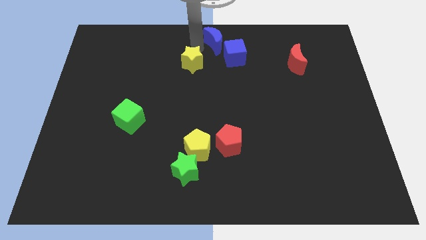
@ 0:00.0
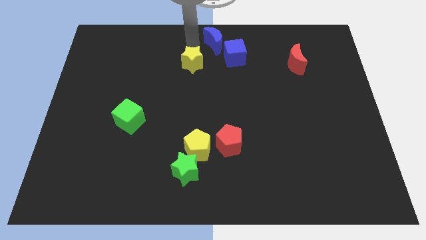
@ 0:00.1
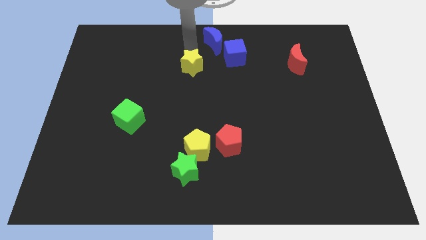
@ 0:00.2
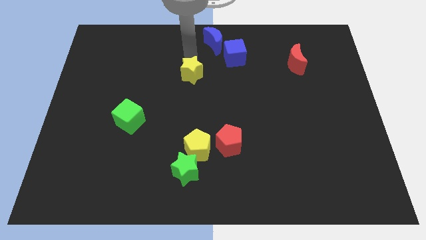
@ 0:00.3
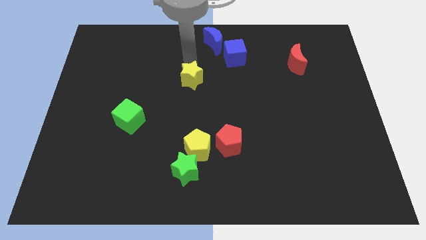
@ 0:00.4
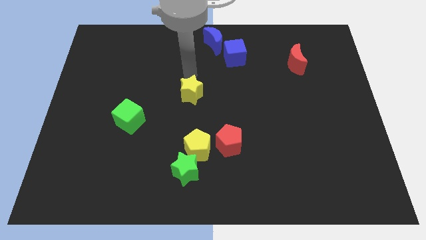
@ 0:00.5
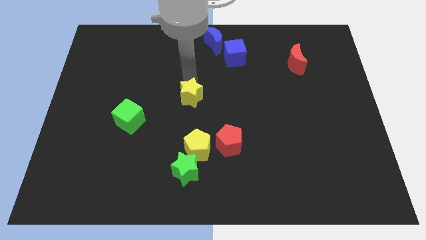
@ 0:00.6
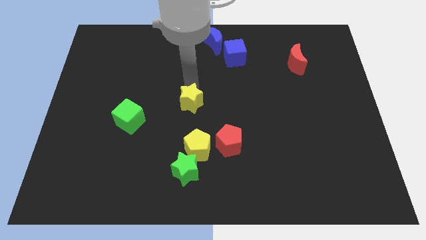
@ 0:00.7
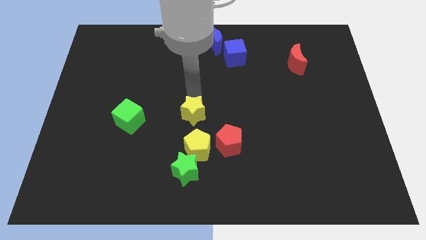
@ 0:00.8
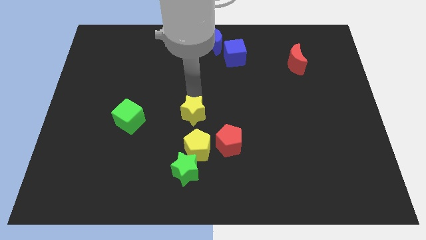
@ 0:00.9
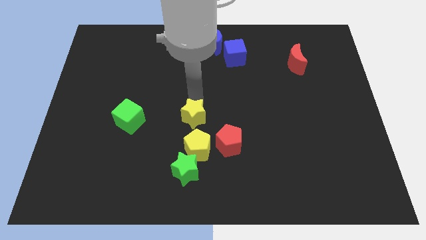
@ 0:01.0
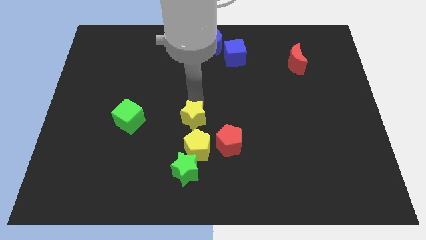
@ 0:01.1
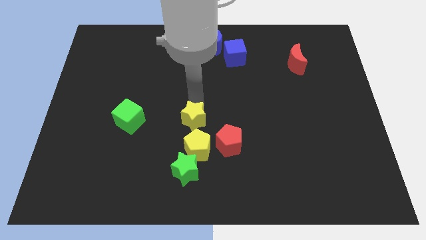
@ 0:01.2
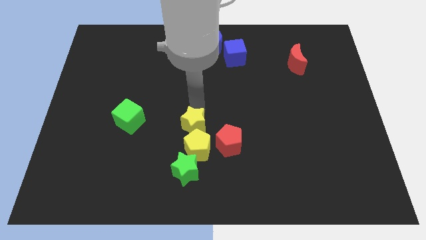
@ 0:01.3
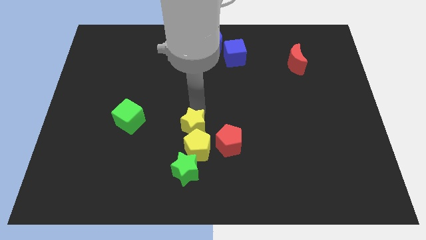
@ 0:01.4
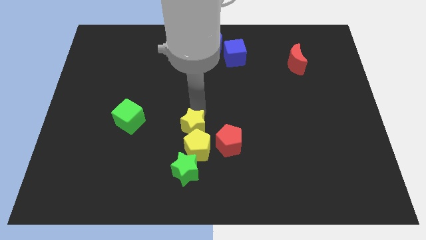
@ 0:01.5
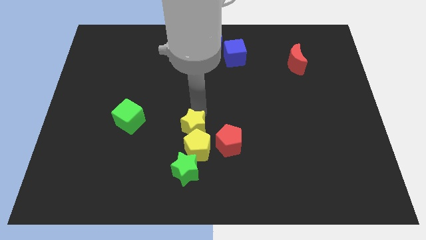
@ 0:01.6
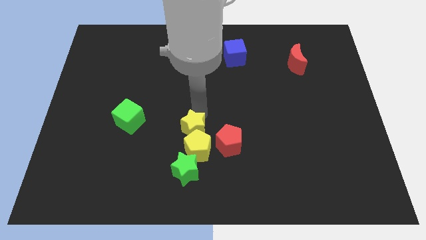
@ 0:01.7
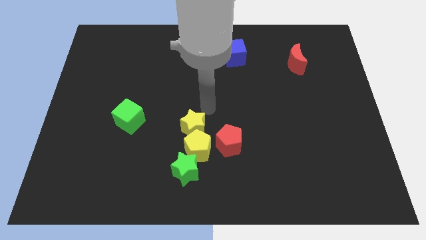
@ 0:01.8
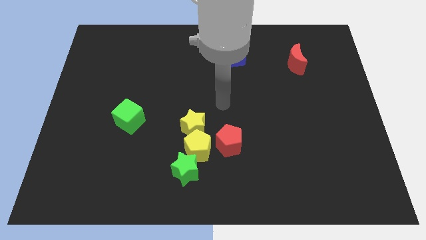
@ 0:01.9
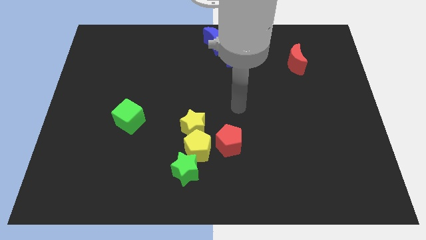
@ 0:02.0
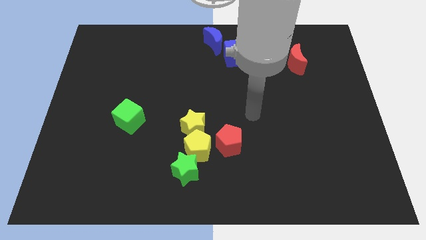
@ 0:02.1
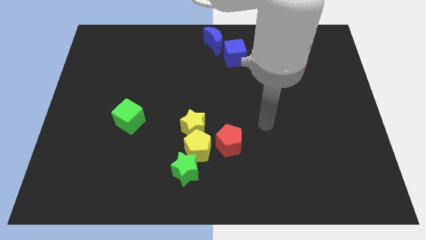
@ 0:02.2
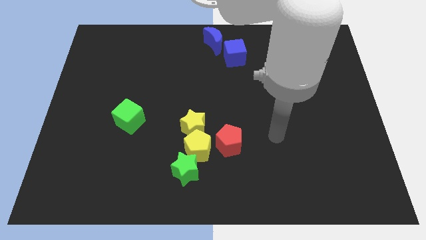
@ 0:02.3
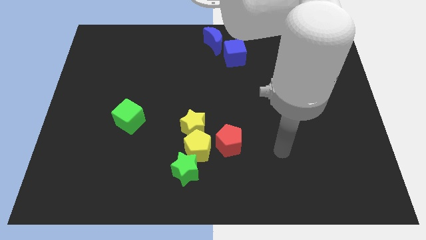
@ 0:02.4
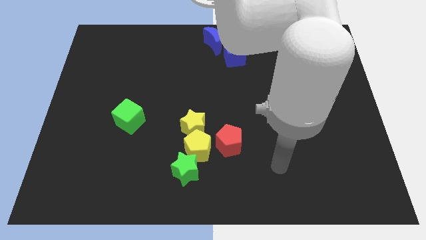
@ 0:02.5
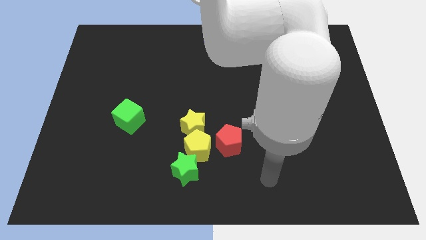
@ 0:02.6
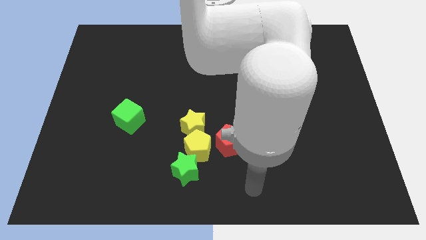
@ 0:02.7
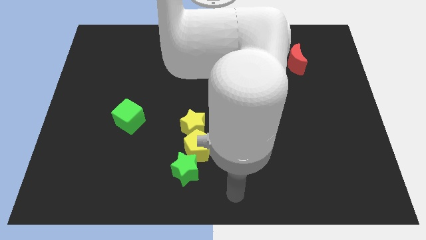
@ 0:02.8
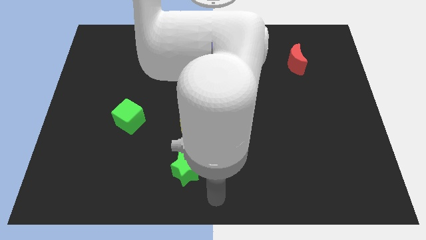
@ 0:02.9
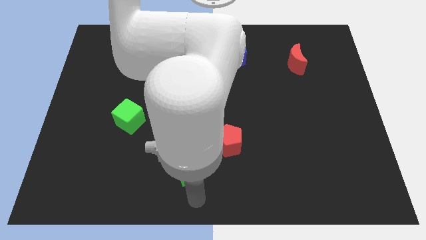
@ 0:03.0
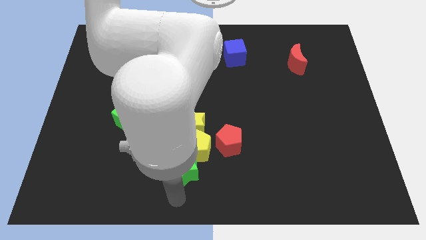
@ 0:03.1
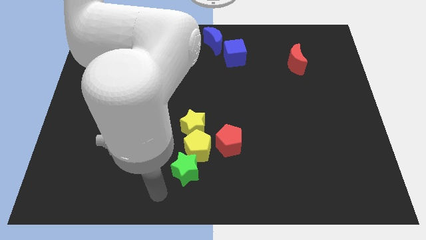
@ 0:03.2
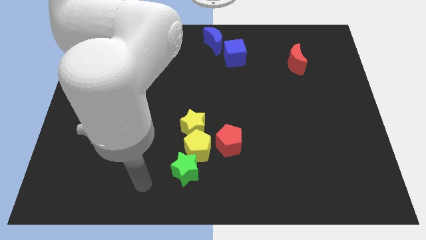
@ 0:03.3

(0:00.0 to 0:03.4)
move the yellow star to the top of the yellow pentagon

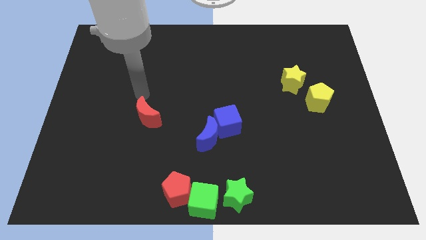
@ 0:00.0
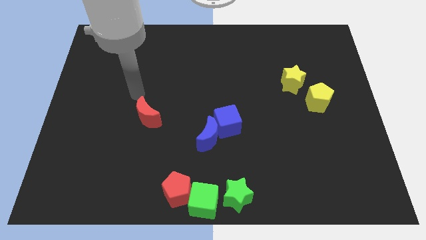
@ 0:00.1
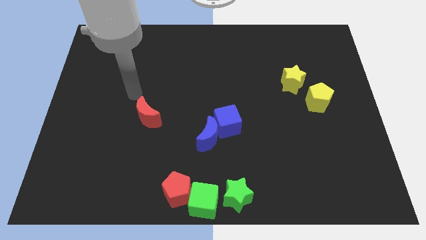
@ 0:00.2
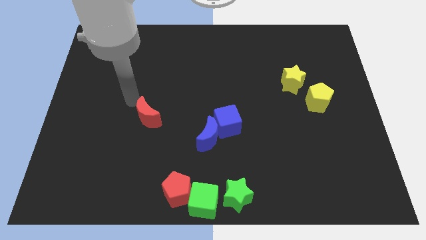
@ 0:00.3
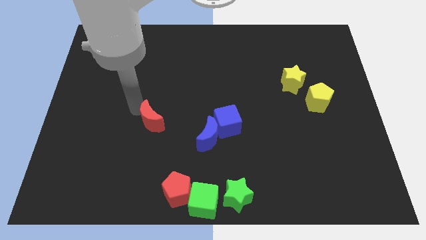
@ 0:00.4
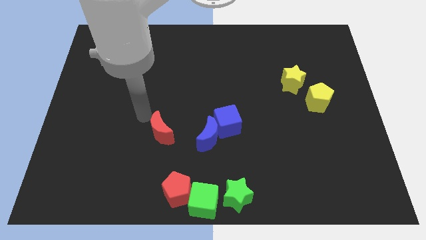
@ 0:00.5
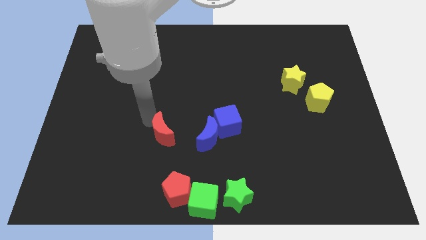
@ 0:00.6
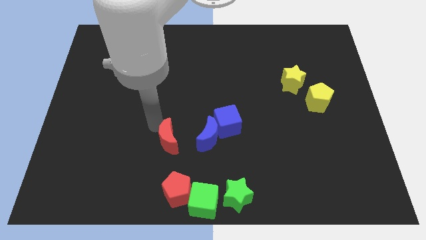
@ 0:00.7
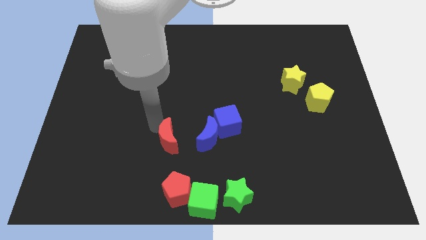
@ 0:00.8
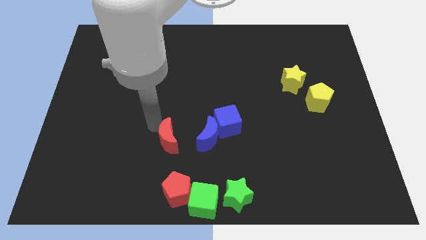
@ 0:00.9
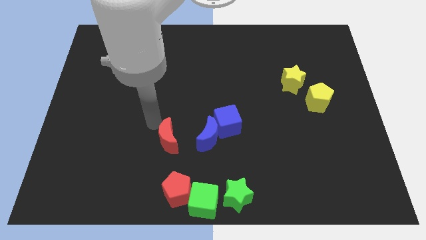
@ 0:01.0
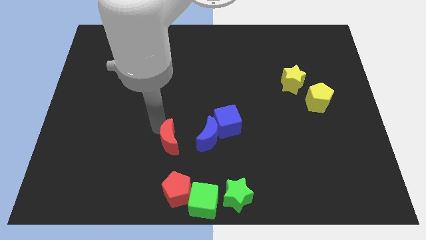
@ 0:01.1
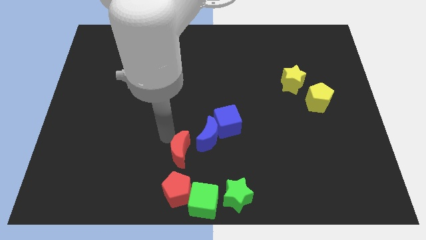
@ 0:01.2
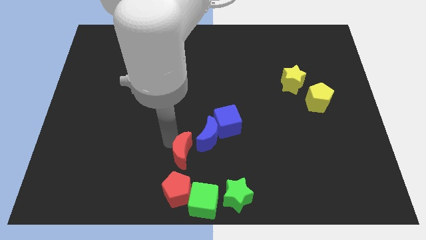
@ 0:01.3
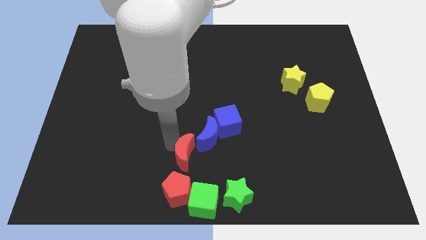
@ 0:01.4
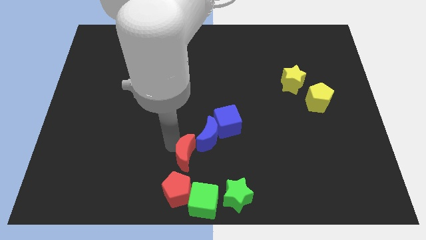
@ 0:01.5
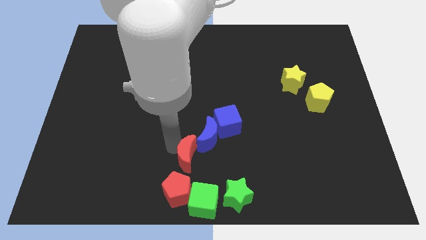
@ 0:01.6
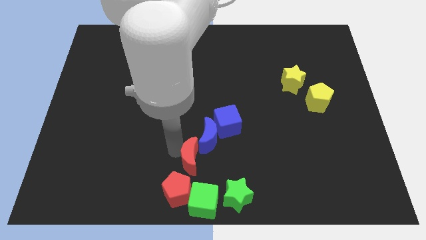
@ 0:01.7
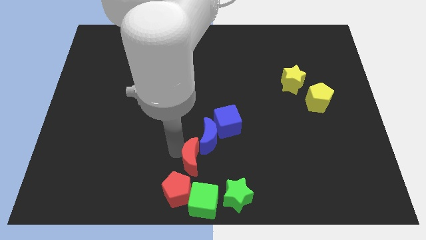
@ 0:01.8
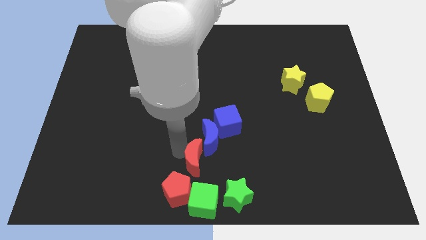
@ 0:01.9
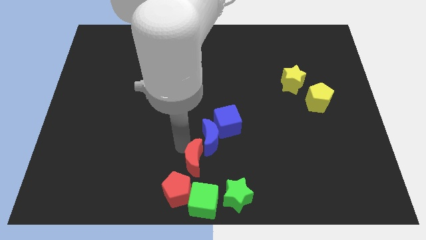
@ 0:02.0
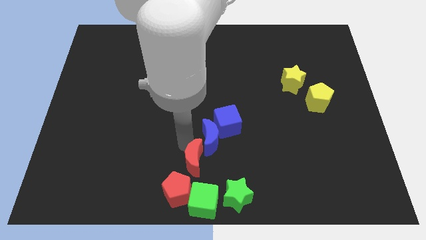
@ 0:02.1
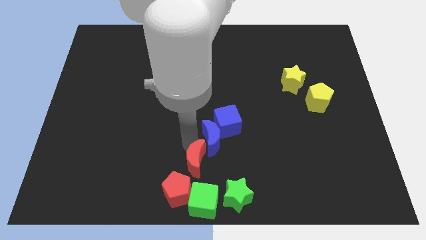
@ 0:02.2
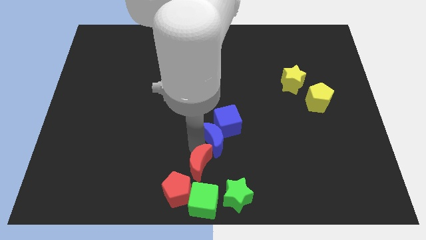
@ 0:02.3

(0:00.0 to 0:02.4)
push the red crescent into the blue crescent

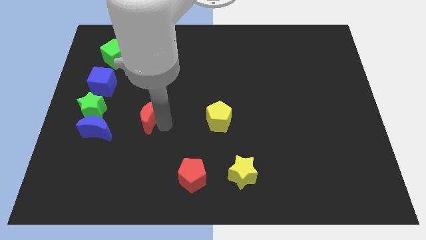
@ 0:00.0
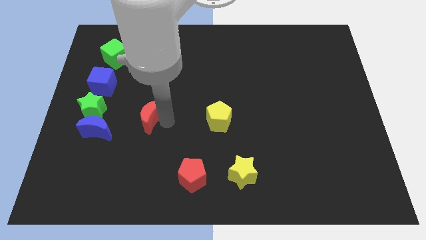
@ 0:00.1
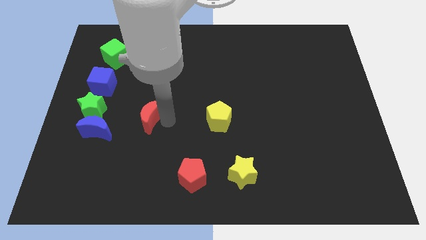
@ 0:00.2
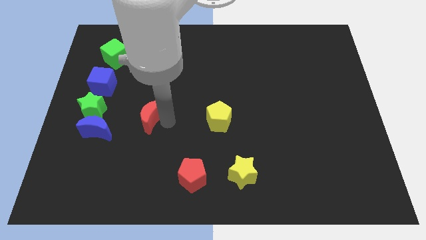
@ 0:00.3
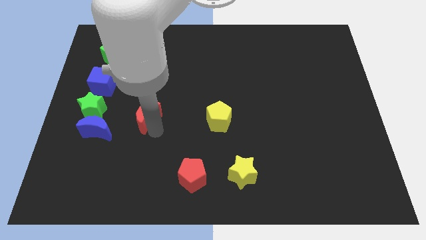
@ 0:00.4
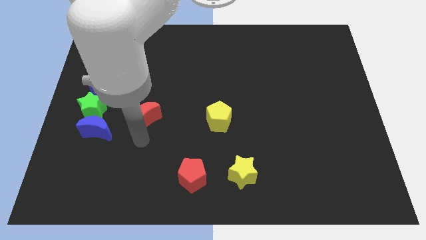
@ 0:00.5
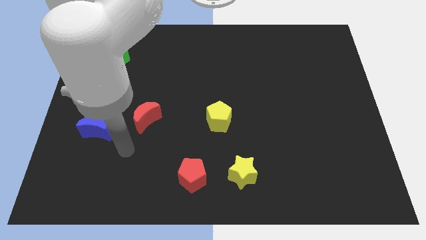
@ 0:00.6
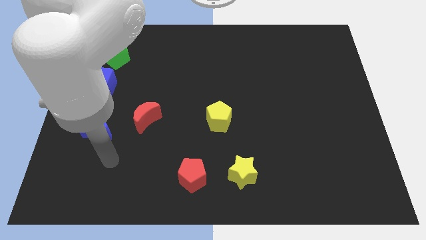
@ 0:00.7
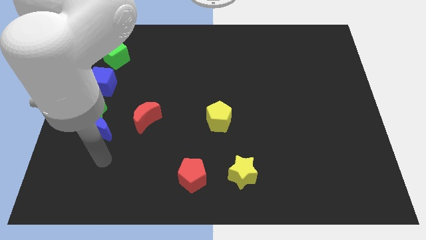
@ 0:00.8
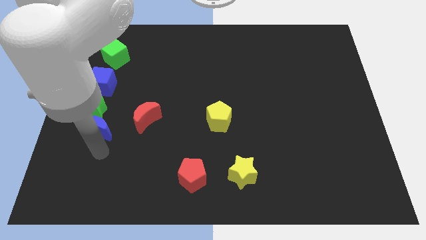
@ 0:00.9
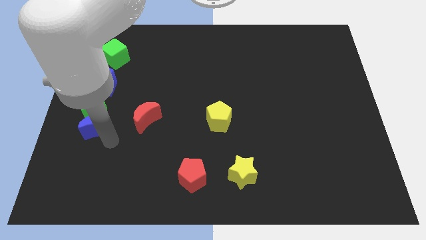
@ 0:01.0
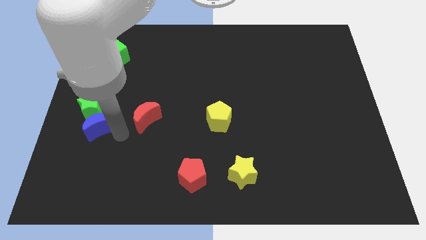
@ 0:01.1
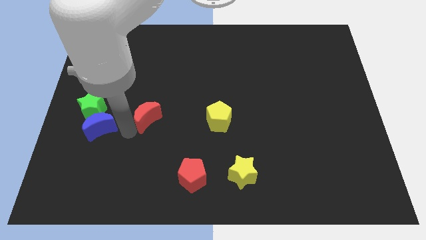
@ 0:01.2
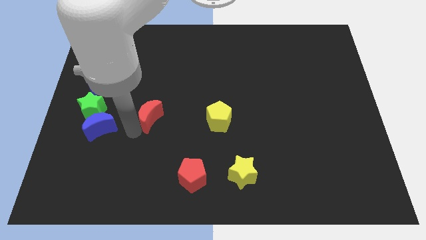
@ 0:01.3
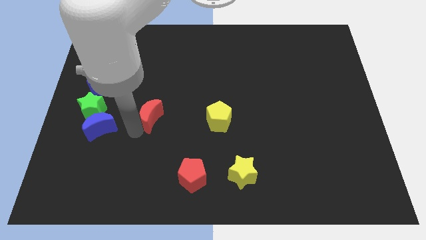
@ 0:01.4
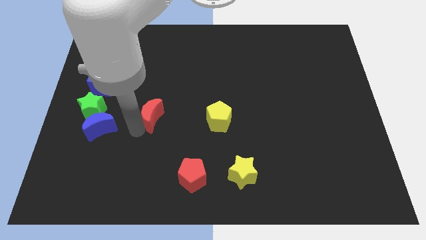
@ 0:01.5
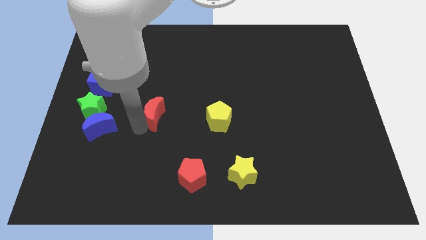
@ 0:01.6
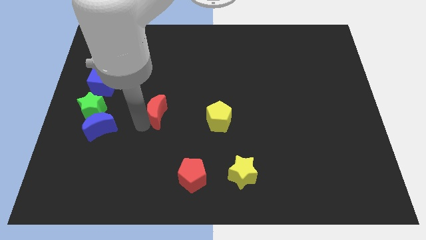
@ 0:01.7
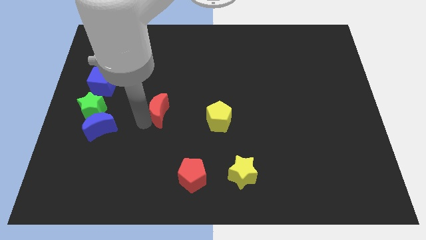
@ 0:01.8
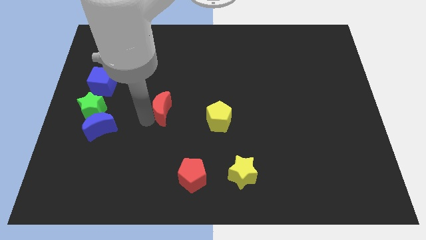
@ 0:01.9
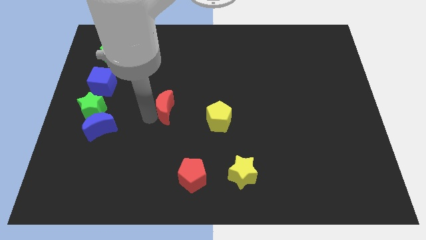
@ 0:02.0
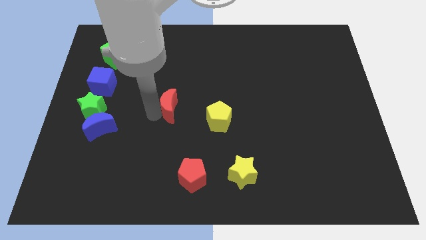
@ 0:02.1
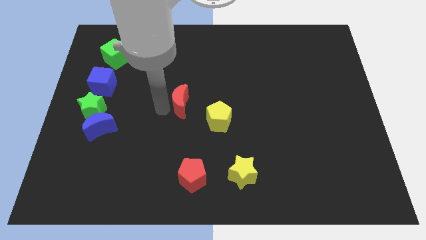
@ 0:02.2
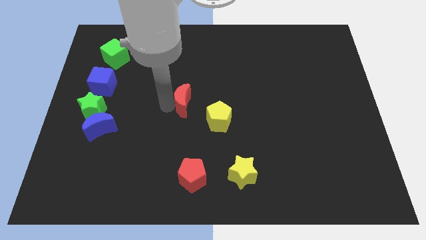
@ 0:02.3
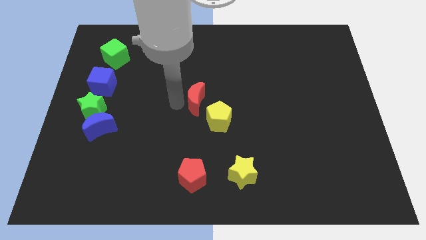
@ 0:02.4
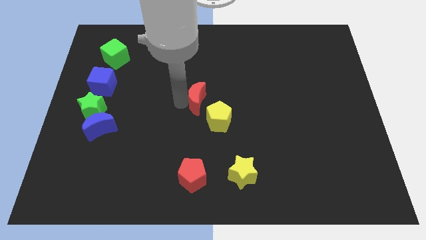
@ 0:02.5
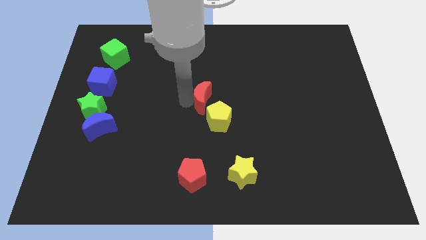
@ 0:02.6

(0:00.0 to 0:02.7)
place the red moon at the center of the board

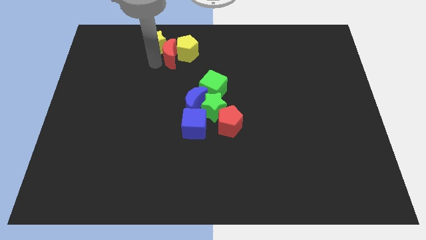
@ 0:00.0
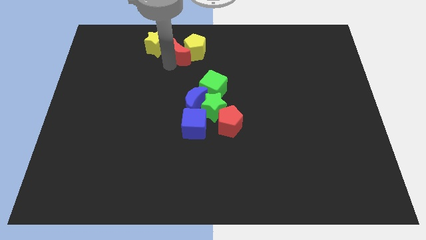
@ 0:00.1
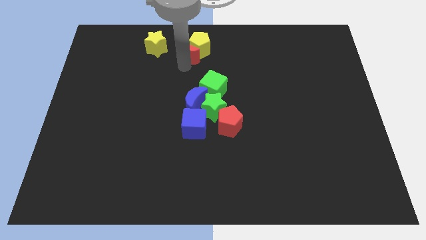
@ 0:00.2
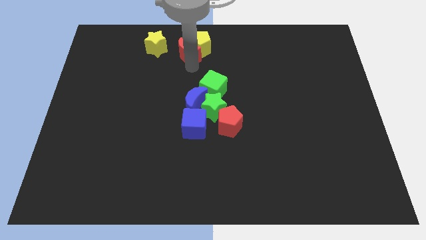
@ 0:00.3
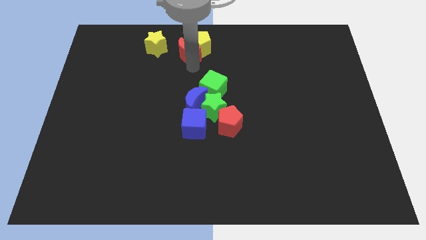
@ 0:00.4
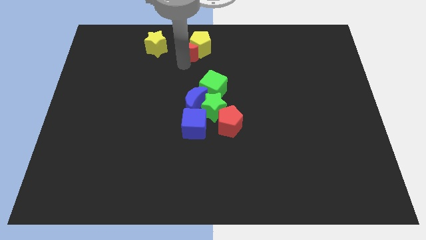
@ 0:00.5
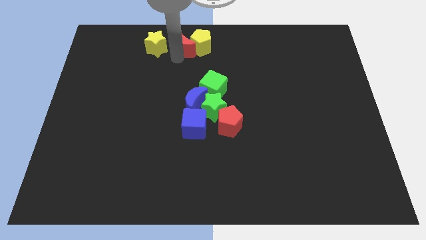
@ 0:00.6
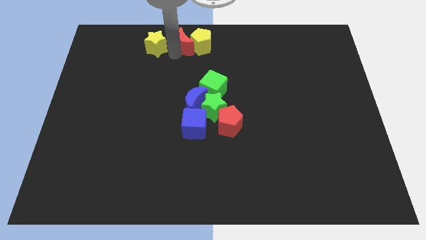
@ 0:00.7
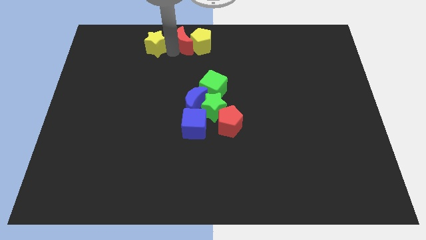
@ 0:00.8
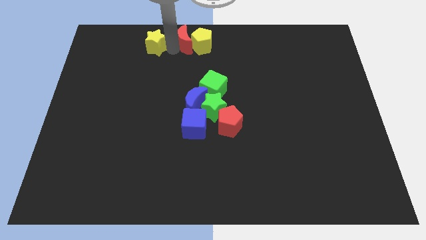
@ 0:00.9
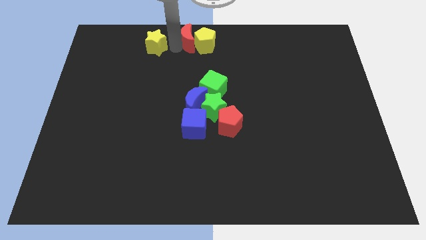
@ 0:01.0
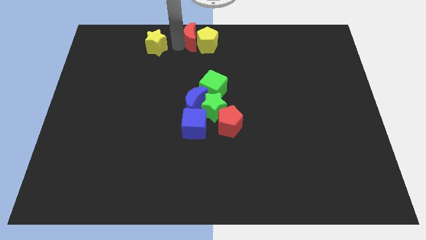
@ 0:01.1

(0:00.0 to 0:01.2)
slide the red moon and the yellow pentagon slightly to the right
